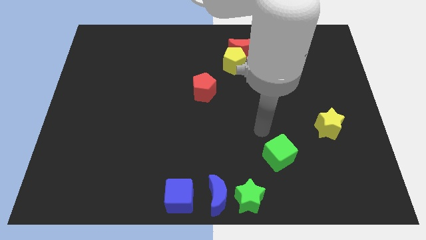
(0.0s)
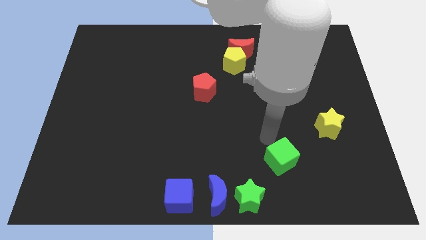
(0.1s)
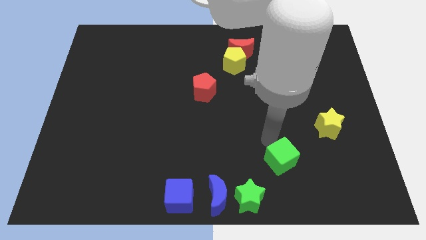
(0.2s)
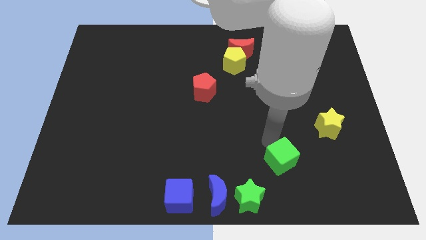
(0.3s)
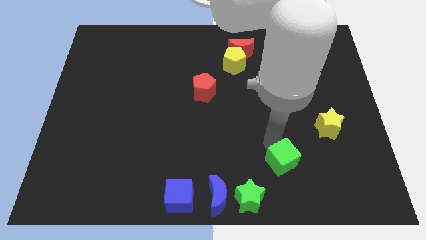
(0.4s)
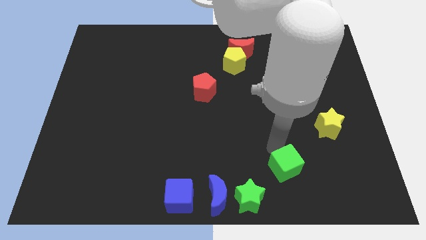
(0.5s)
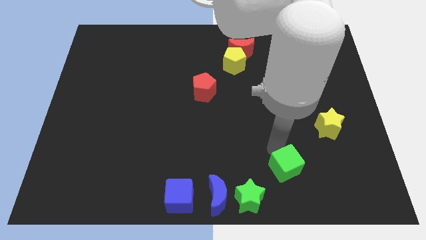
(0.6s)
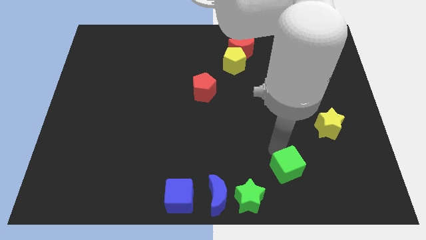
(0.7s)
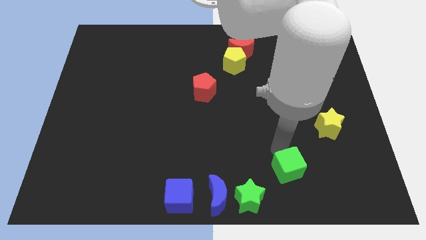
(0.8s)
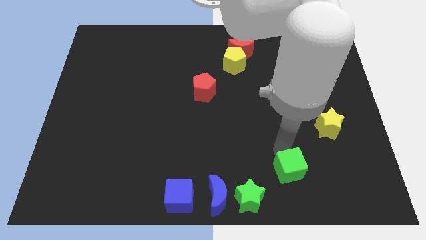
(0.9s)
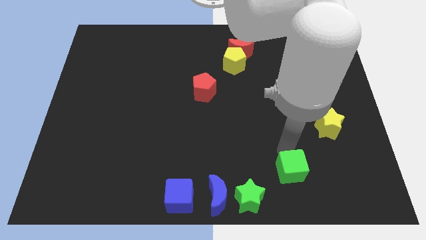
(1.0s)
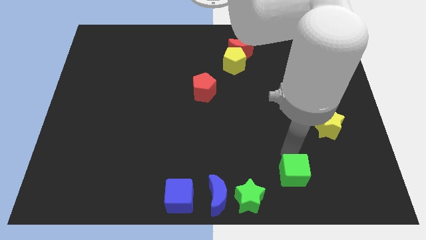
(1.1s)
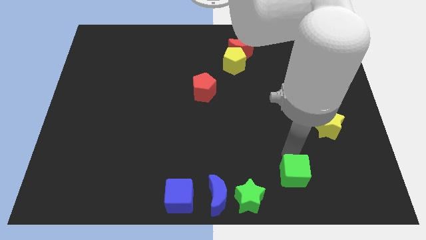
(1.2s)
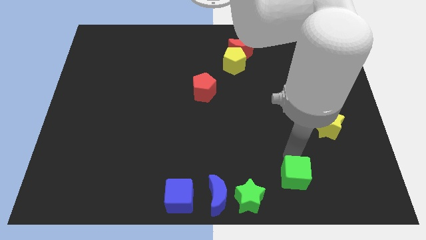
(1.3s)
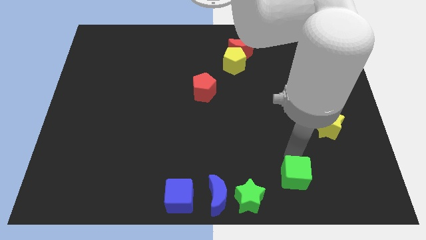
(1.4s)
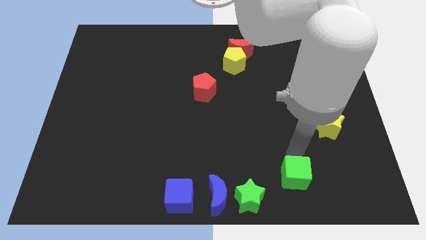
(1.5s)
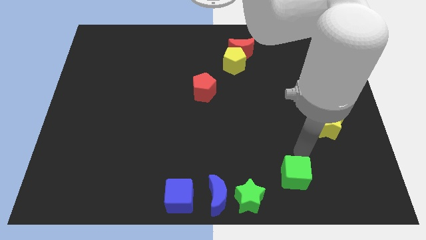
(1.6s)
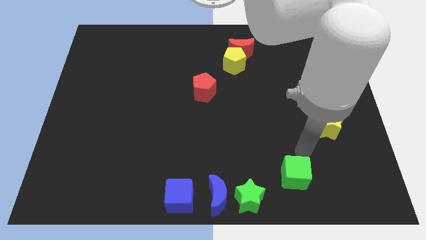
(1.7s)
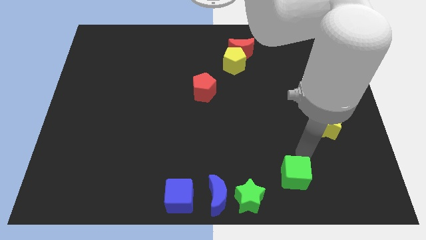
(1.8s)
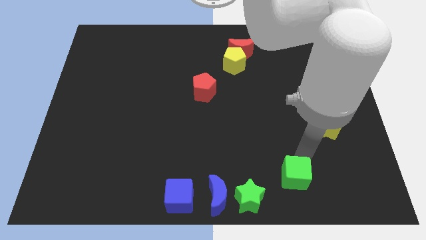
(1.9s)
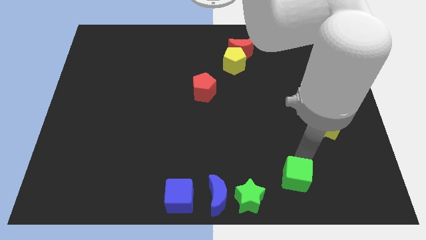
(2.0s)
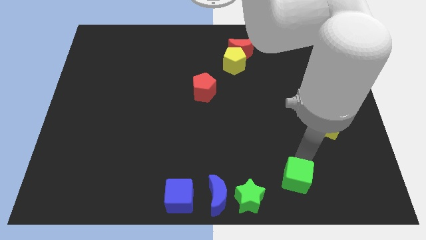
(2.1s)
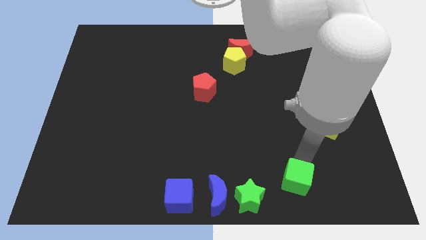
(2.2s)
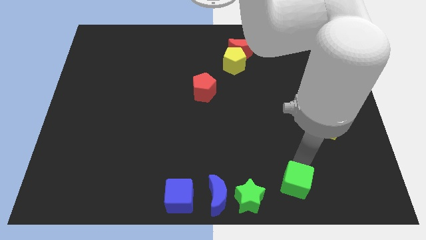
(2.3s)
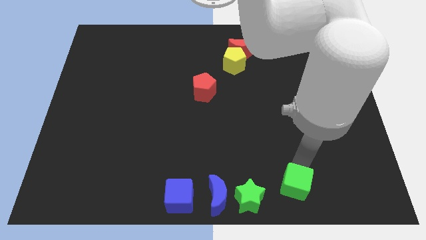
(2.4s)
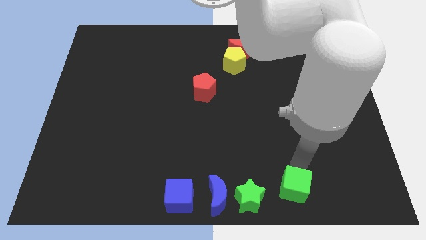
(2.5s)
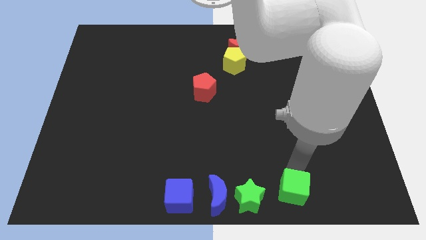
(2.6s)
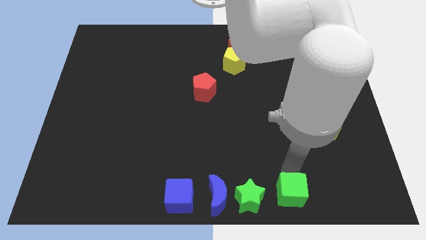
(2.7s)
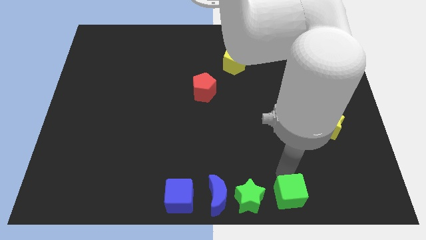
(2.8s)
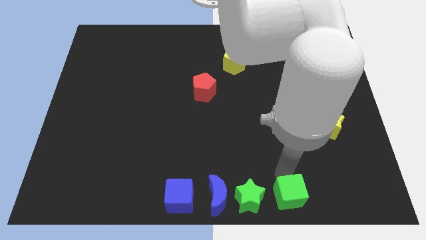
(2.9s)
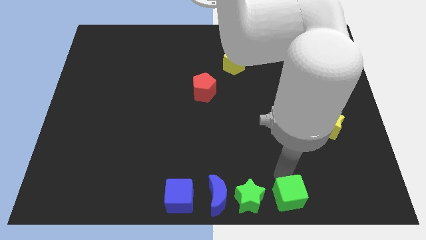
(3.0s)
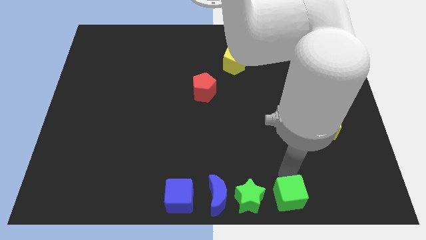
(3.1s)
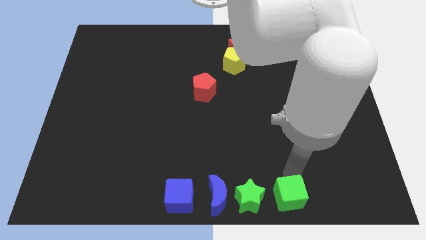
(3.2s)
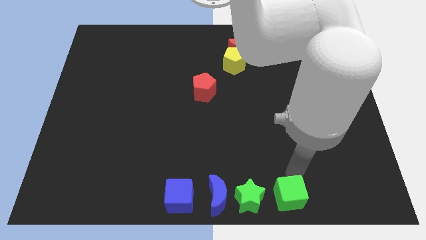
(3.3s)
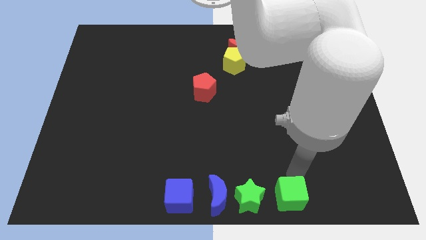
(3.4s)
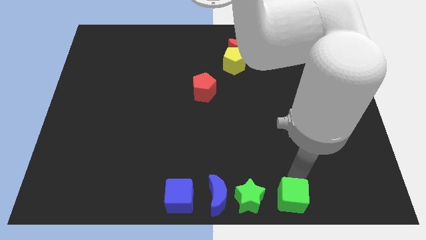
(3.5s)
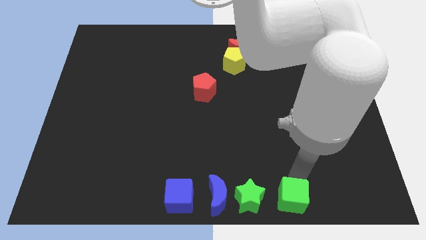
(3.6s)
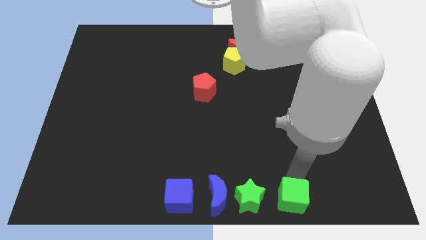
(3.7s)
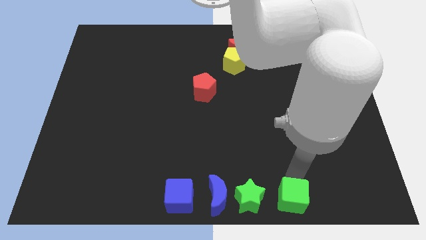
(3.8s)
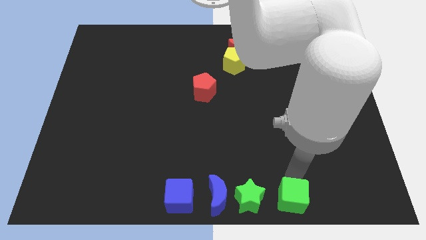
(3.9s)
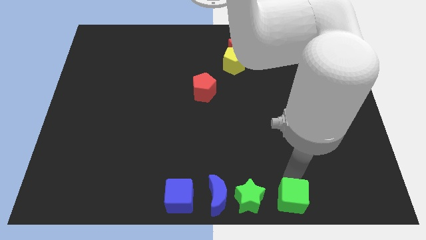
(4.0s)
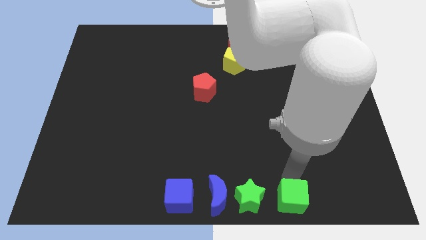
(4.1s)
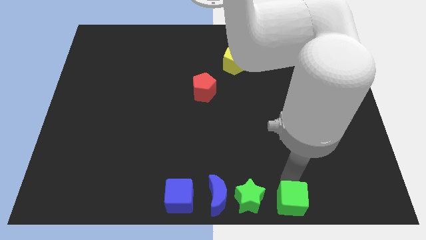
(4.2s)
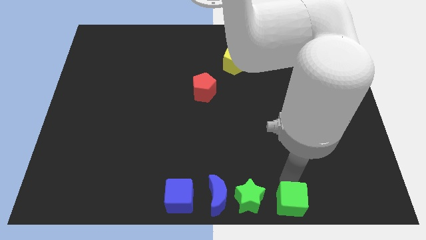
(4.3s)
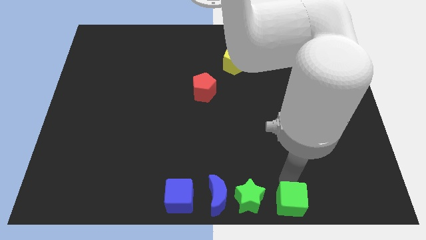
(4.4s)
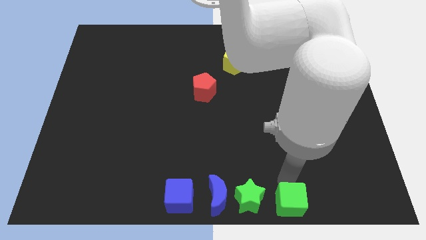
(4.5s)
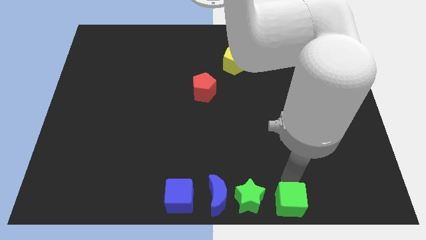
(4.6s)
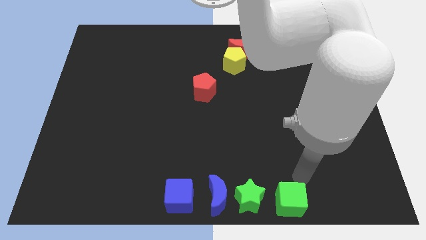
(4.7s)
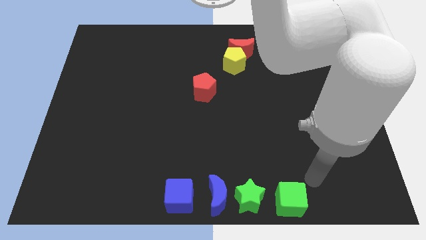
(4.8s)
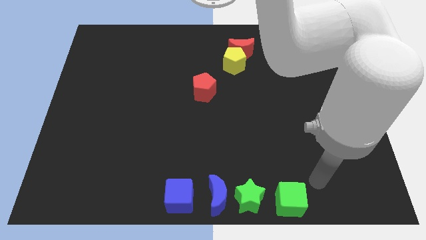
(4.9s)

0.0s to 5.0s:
place the green cube to the right of the green star

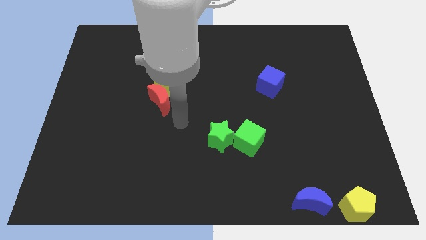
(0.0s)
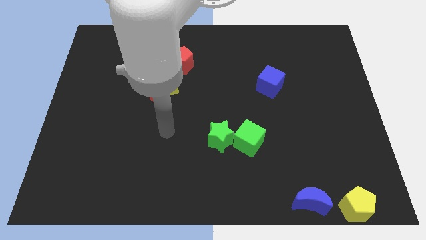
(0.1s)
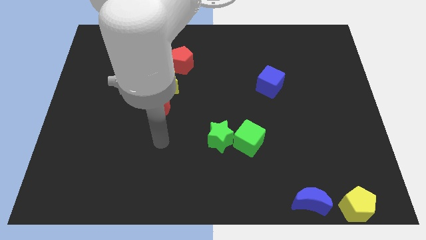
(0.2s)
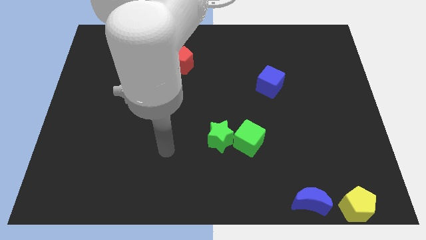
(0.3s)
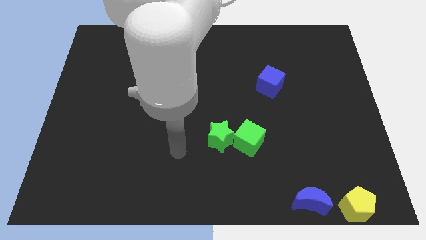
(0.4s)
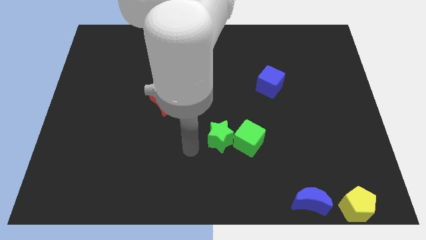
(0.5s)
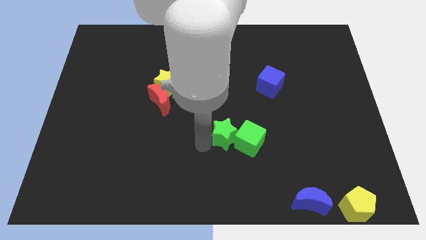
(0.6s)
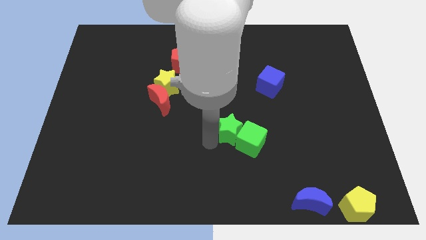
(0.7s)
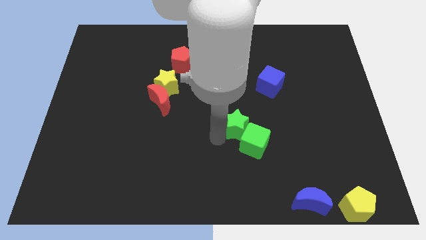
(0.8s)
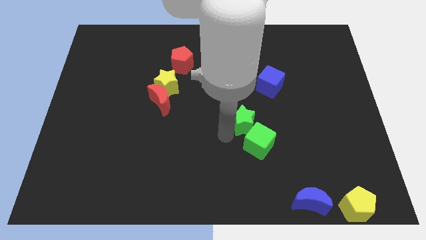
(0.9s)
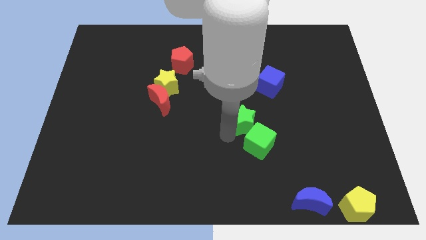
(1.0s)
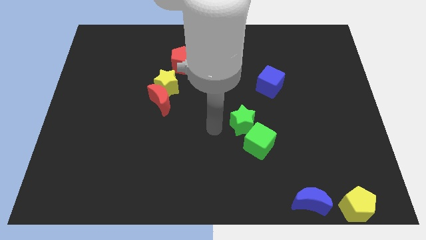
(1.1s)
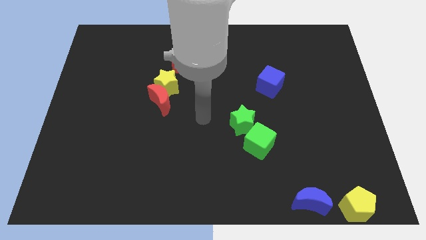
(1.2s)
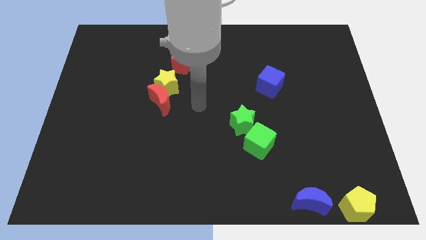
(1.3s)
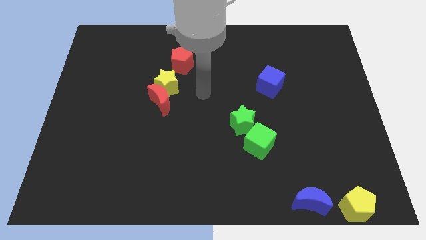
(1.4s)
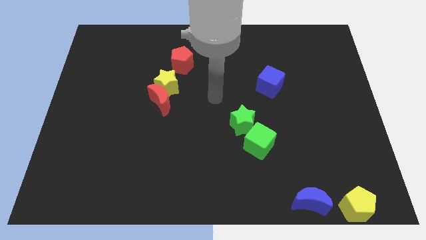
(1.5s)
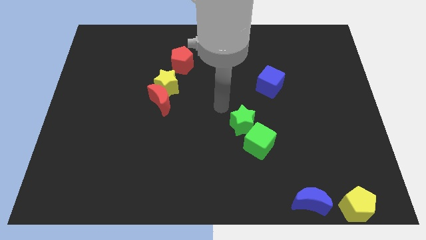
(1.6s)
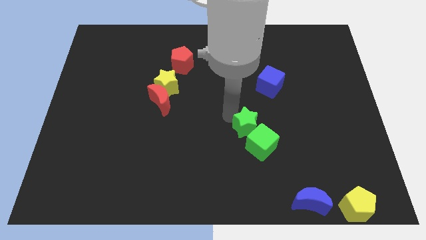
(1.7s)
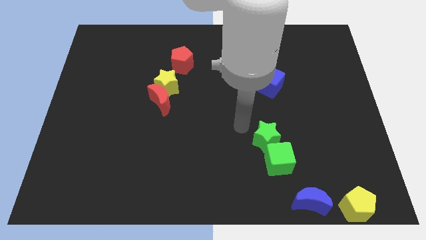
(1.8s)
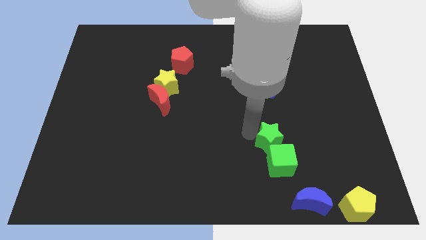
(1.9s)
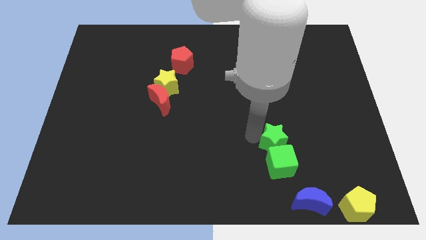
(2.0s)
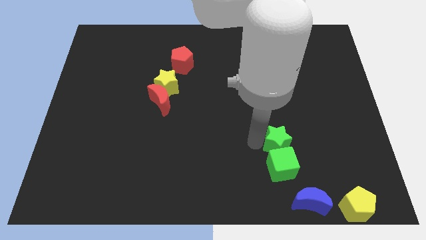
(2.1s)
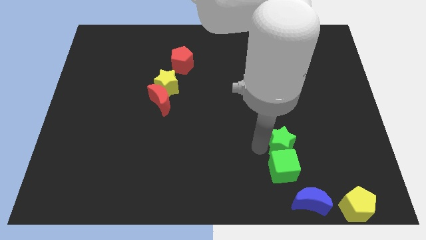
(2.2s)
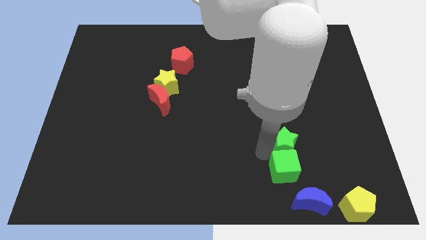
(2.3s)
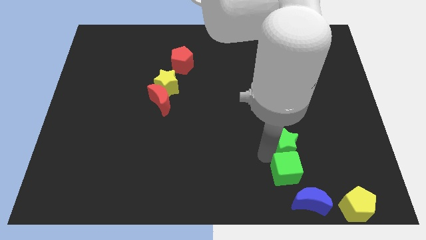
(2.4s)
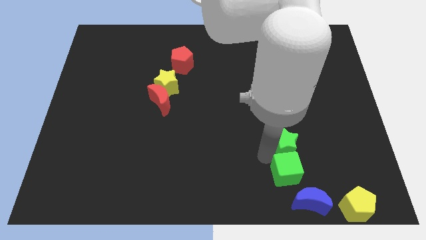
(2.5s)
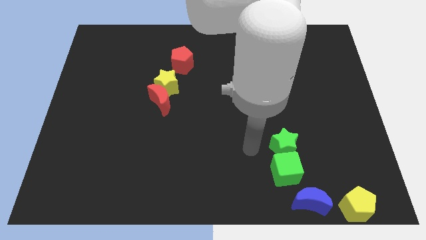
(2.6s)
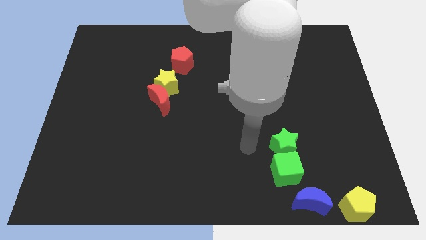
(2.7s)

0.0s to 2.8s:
place the green star in between blue cube and green cube

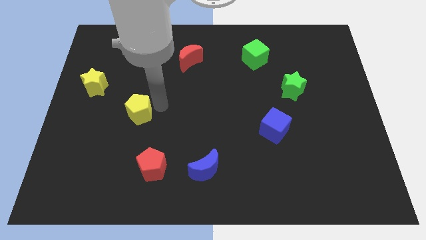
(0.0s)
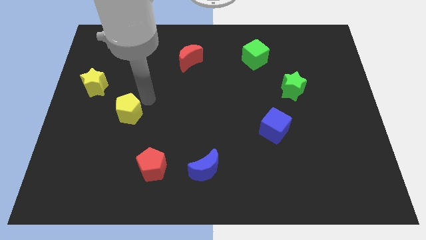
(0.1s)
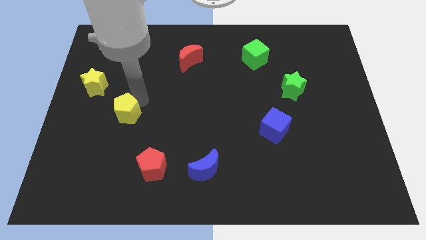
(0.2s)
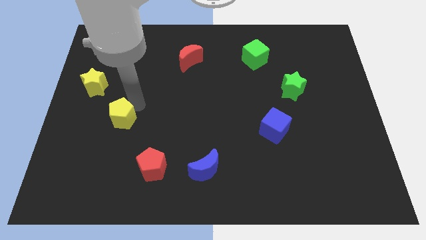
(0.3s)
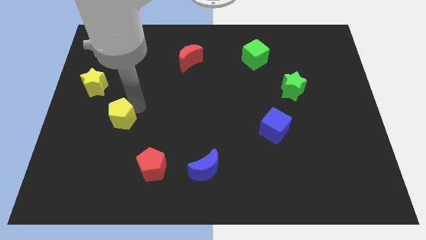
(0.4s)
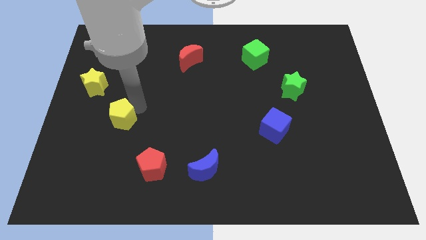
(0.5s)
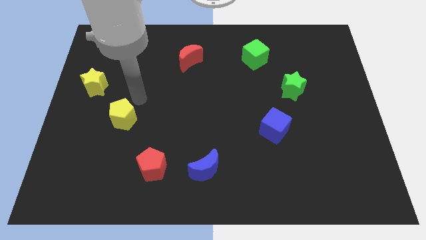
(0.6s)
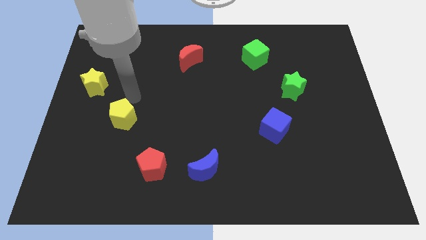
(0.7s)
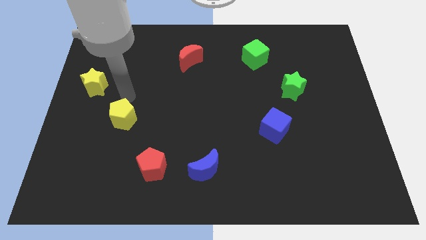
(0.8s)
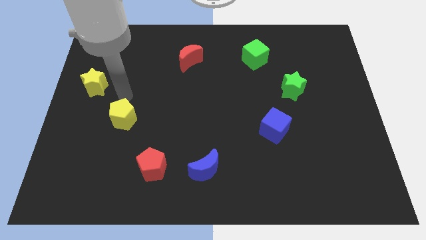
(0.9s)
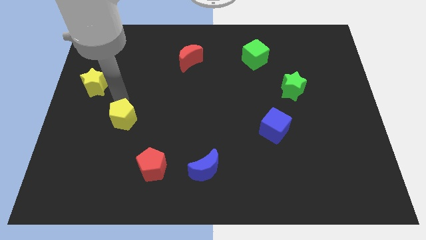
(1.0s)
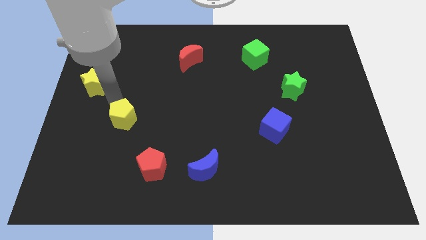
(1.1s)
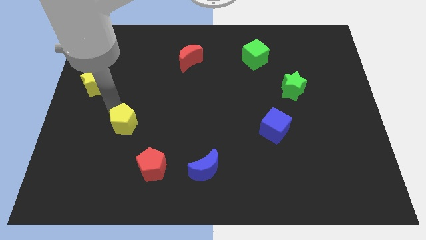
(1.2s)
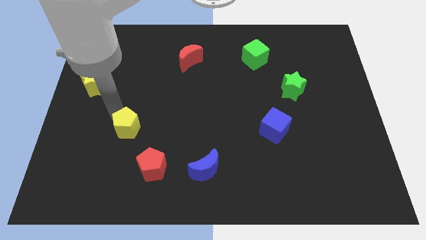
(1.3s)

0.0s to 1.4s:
put the yellow pentagon diagonally top left of the red pentagon
